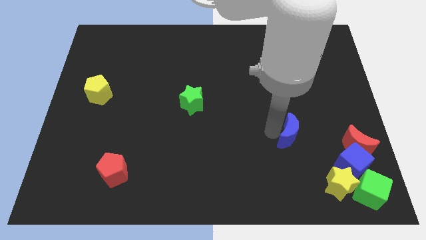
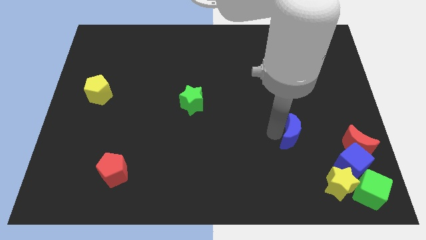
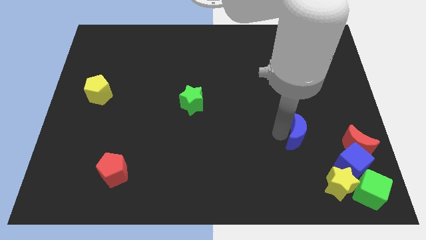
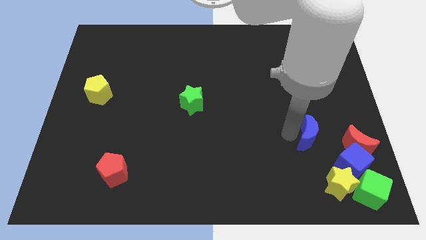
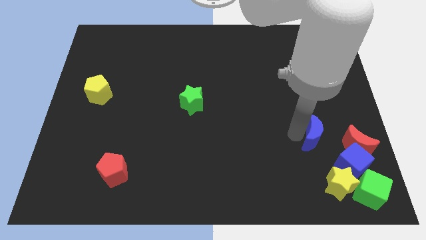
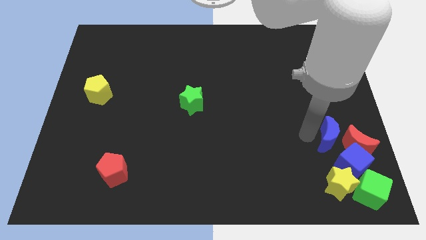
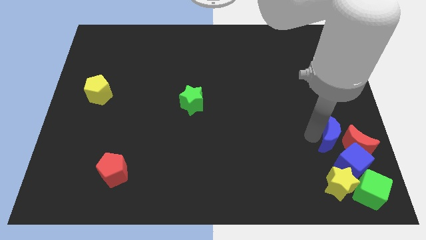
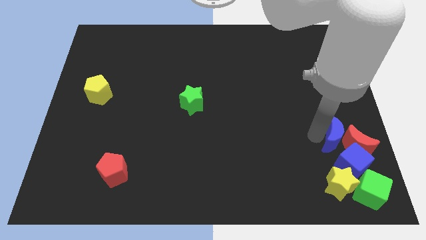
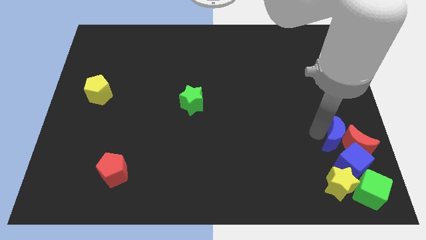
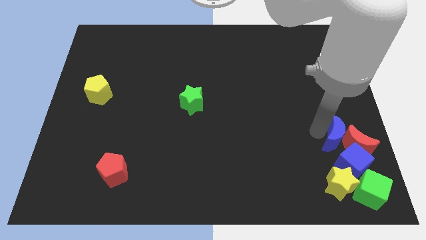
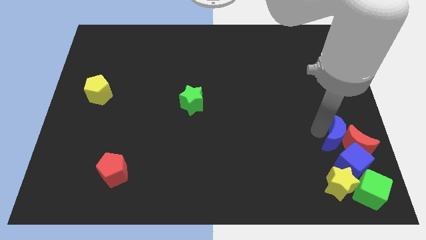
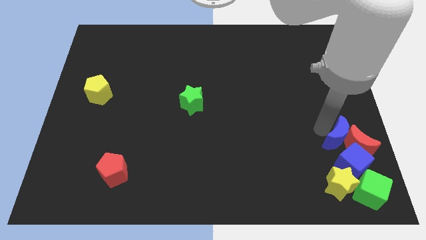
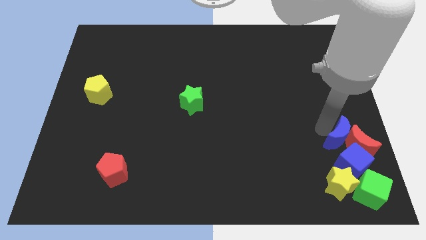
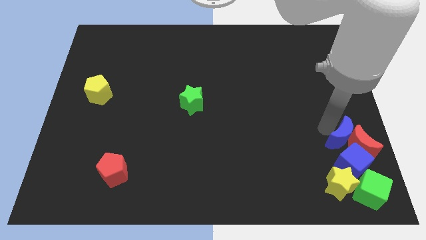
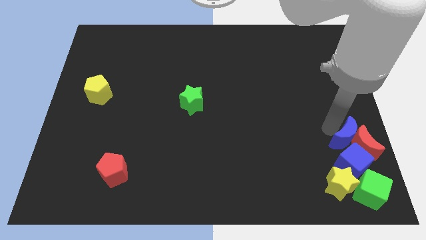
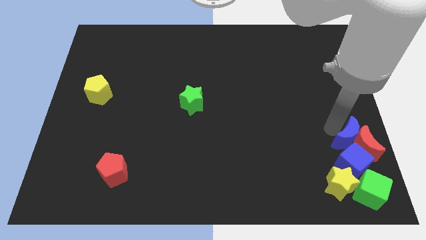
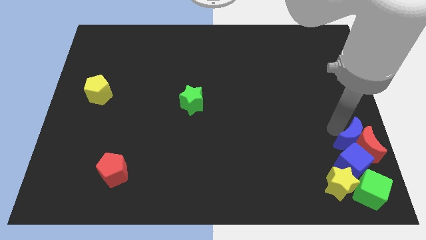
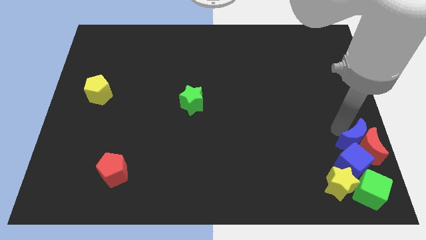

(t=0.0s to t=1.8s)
push the blue crescent into the red crescent

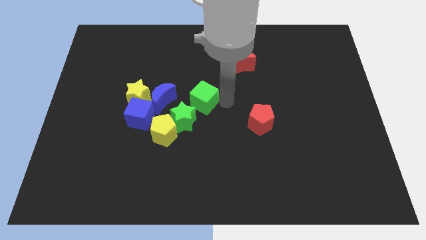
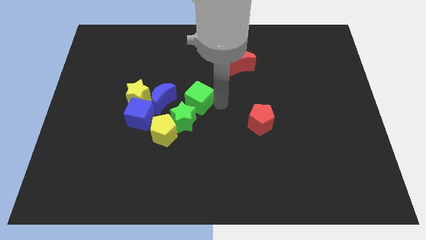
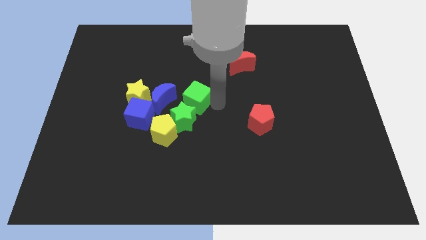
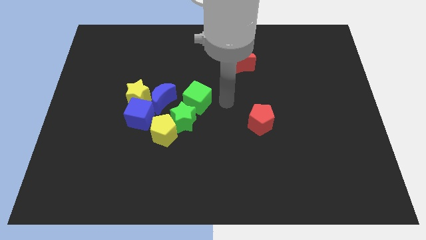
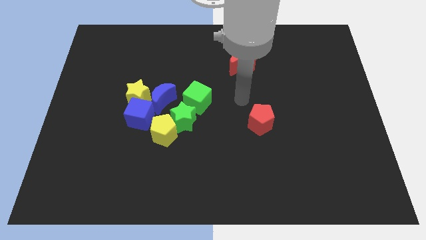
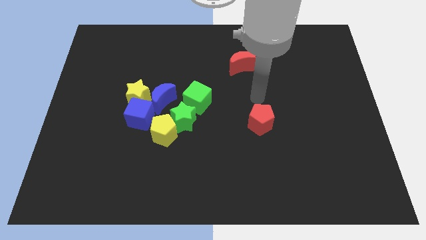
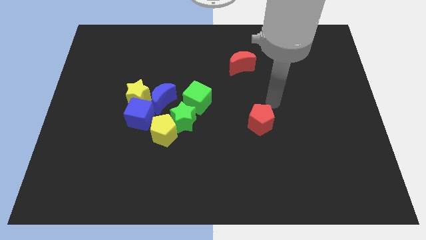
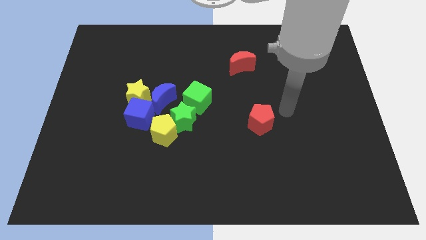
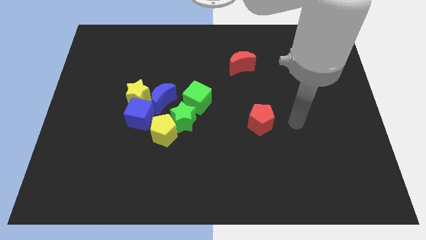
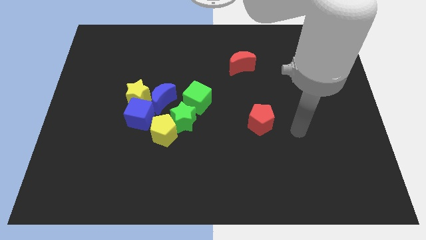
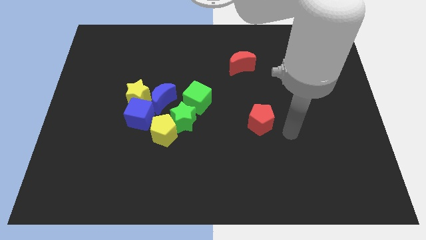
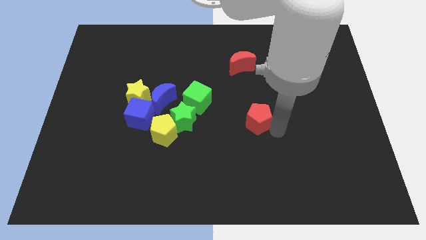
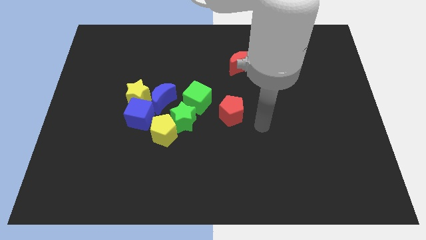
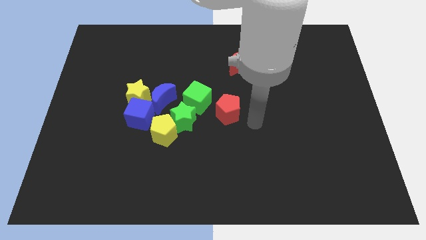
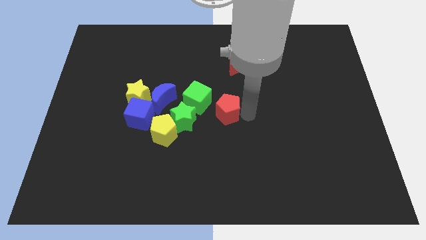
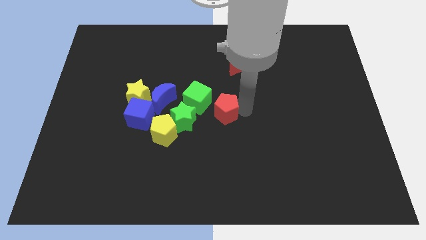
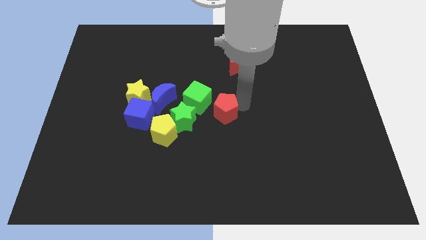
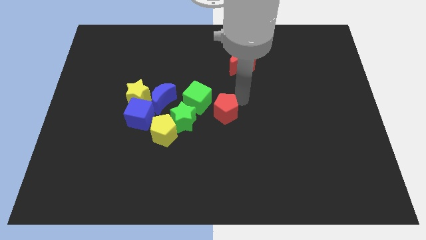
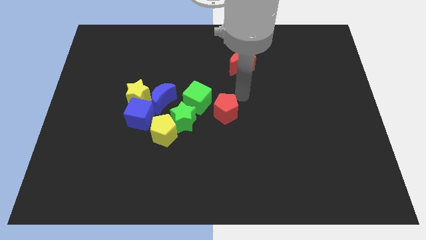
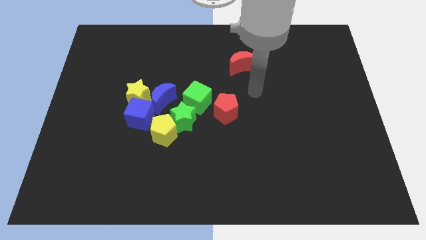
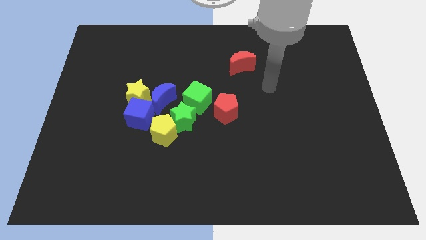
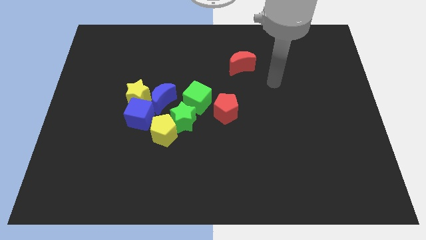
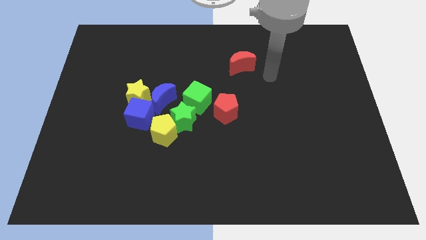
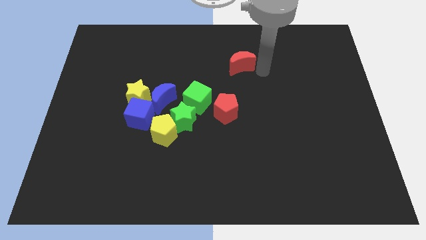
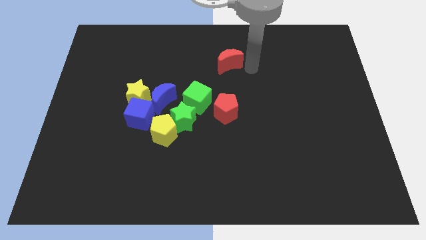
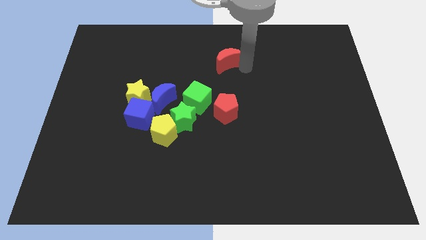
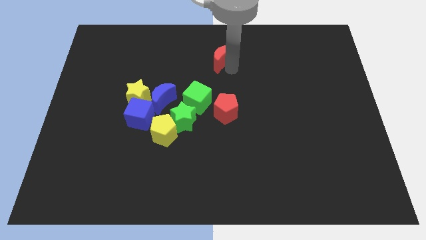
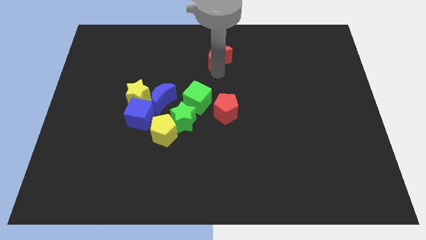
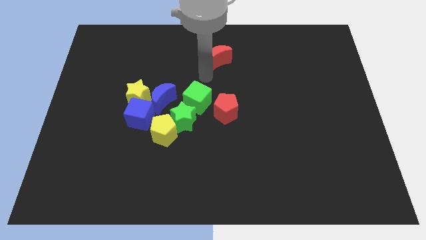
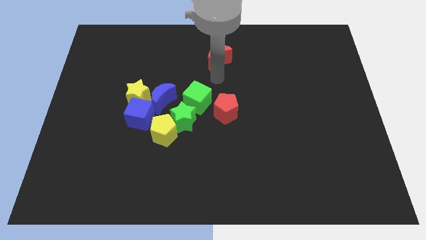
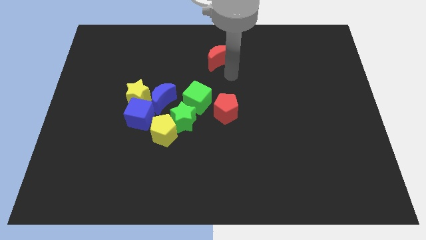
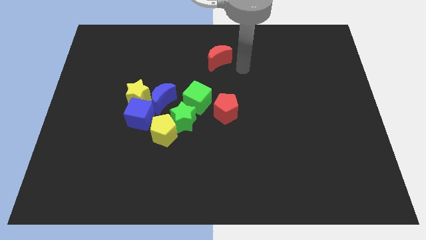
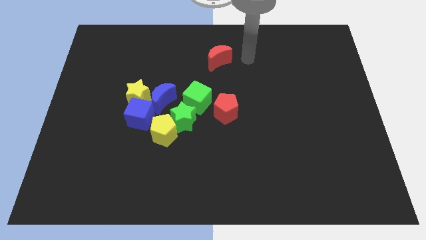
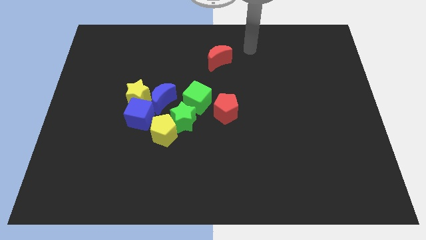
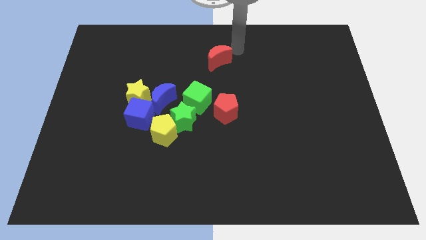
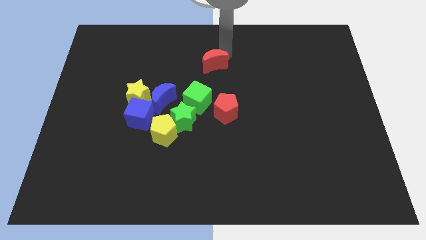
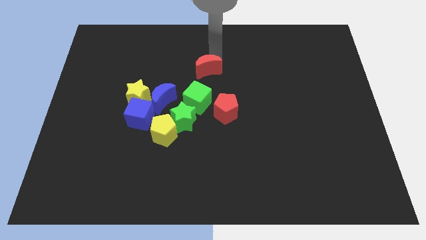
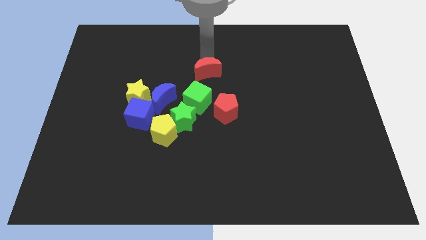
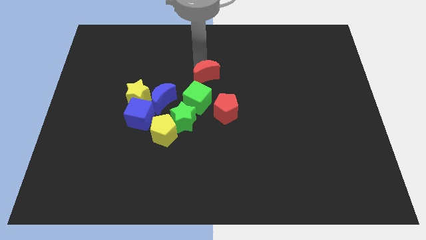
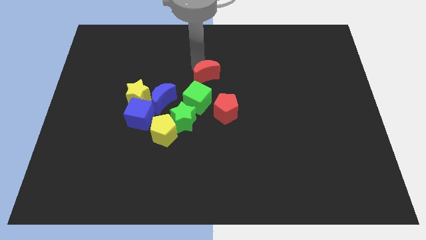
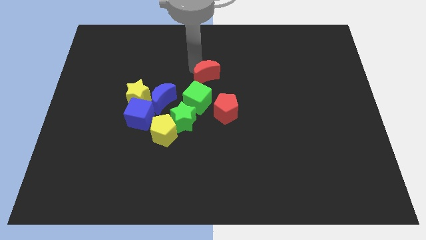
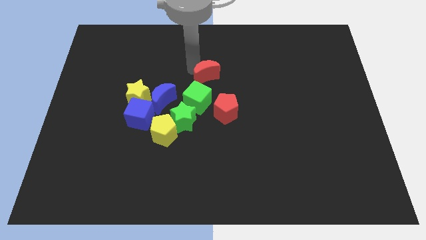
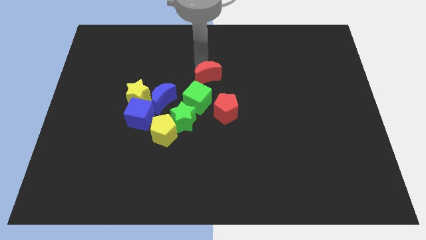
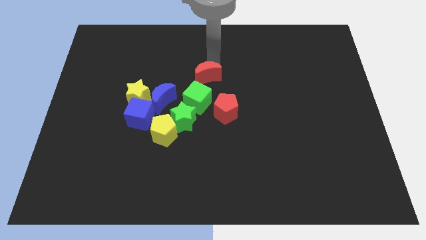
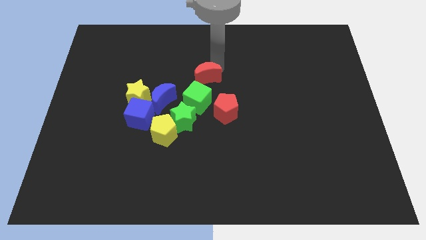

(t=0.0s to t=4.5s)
move two red blocks into the group of blocks

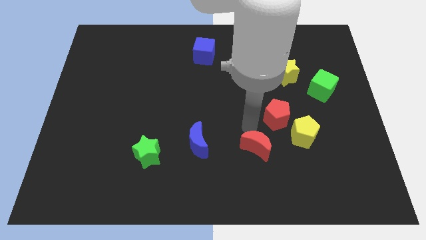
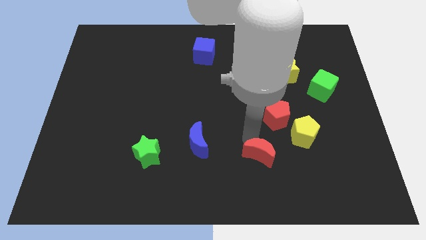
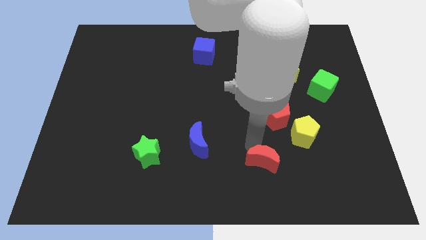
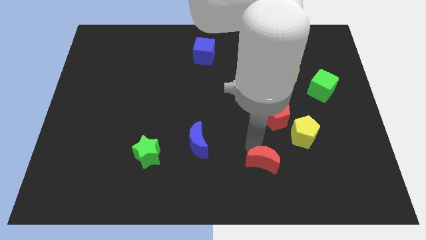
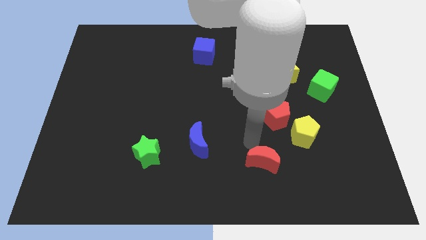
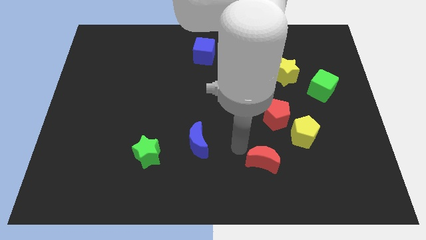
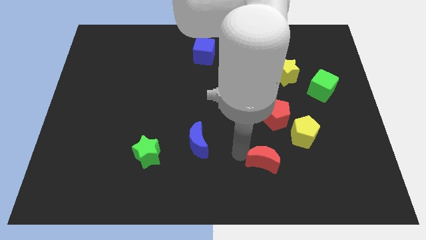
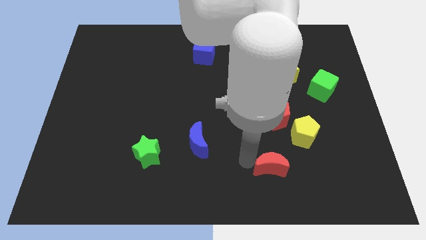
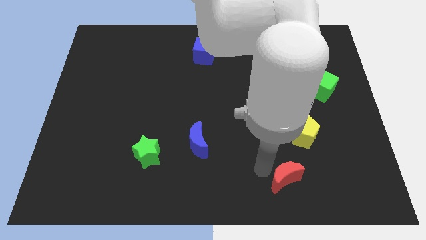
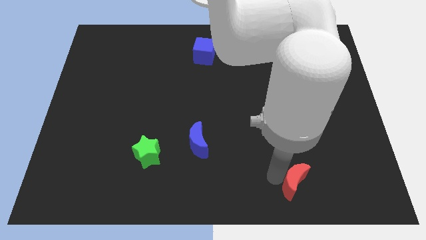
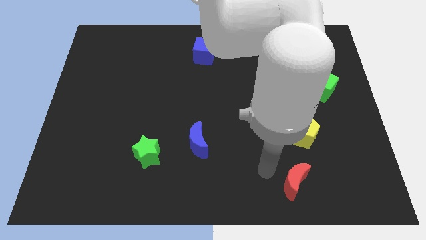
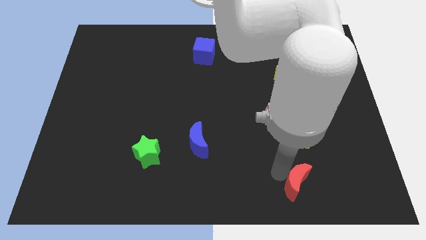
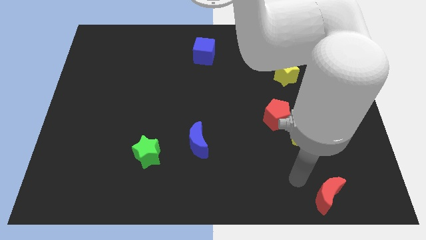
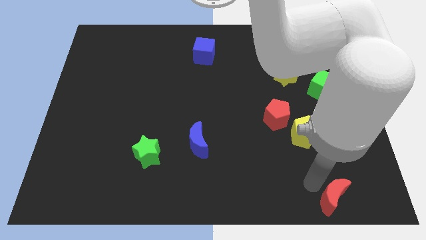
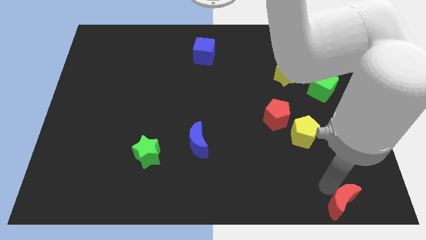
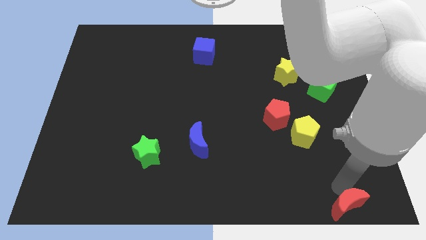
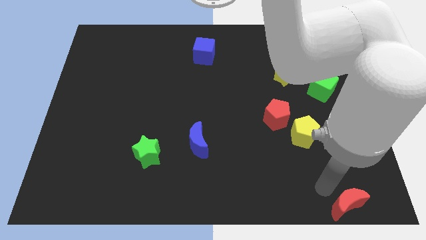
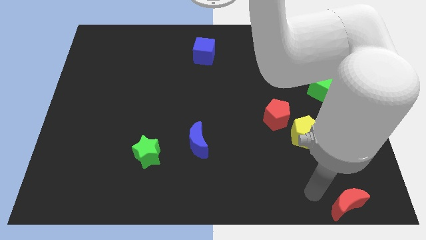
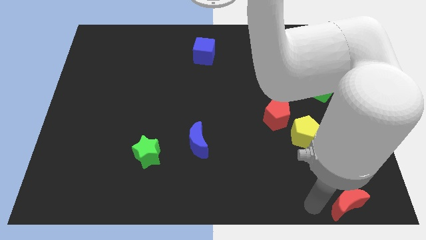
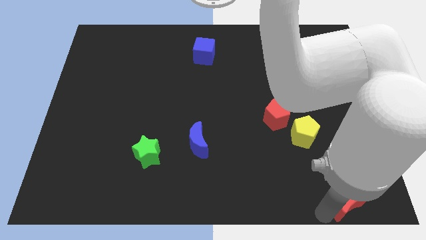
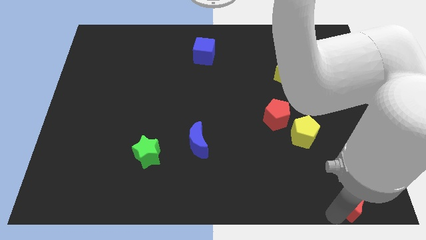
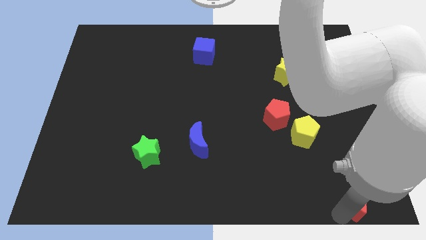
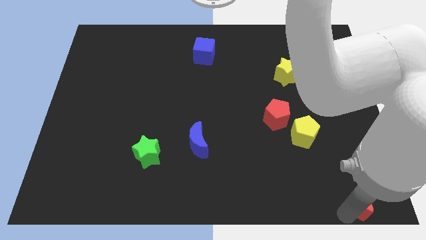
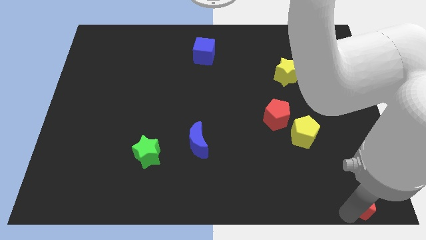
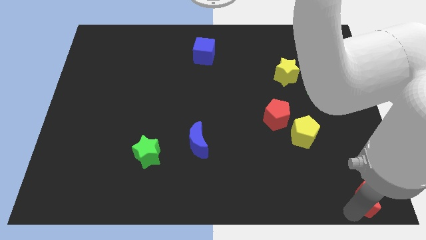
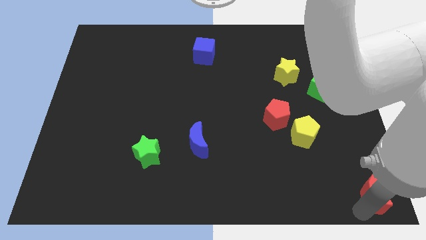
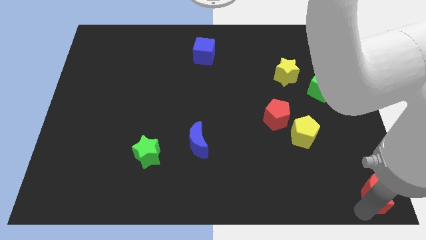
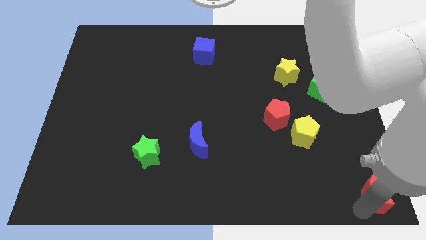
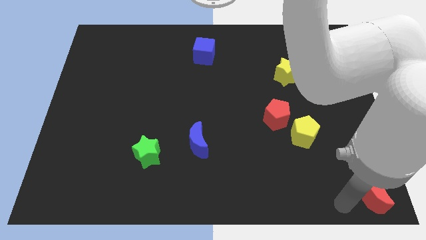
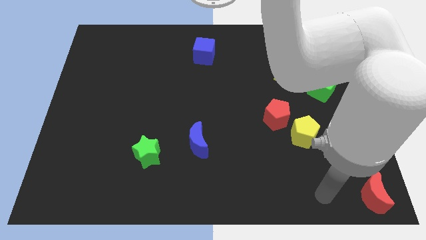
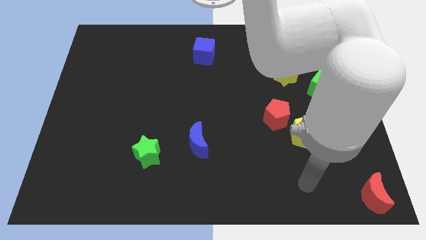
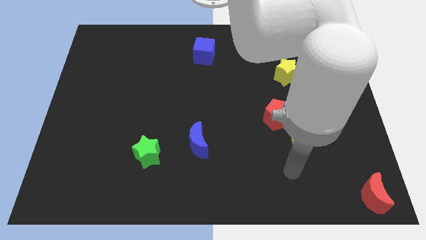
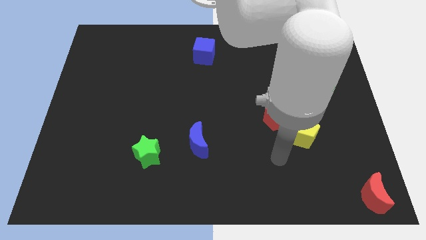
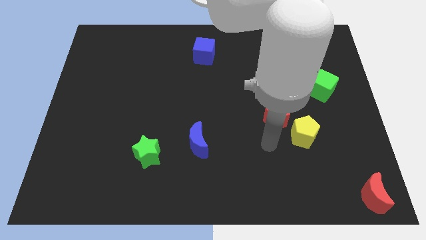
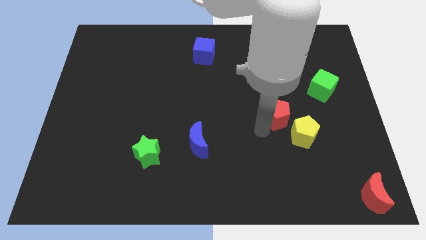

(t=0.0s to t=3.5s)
push the red crescent to the bottom right corner of the board
